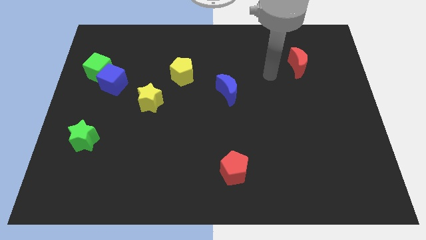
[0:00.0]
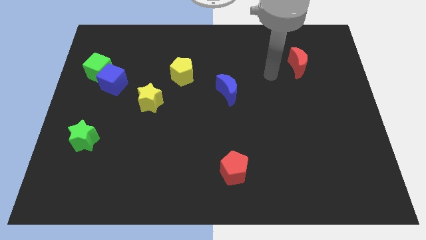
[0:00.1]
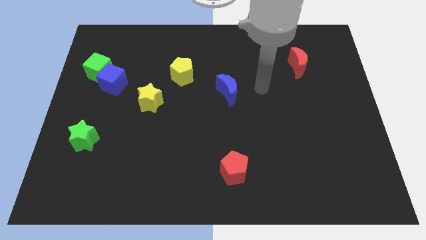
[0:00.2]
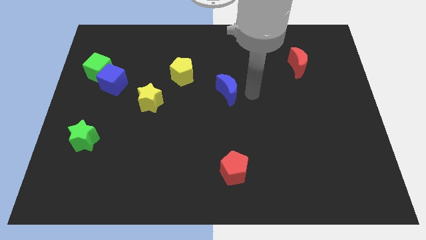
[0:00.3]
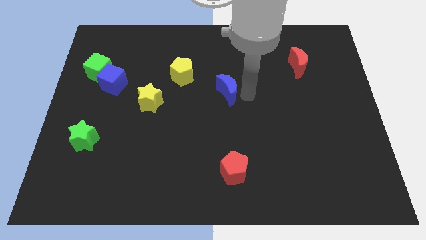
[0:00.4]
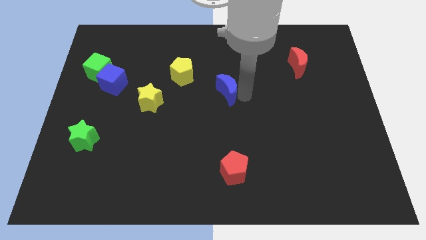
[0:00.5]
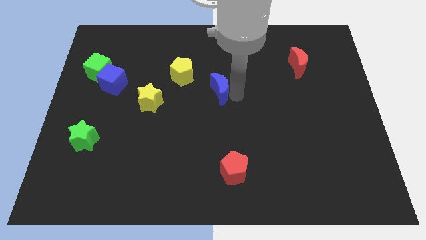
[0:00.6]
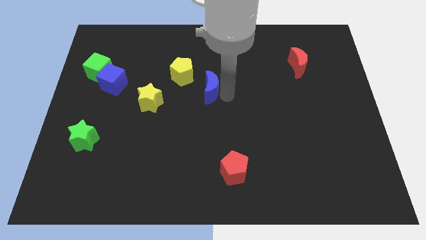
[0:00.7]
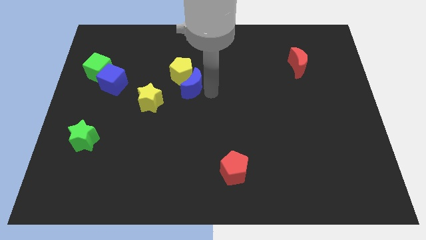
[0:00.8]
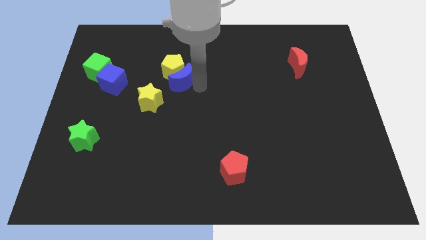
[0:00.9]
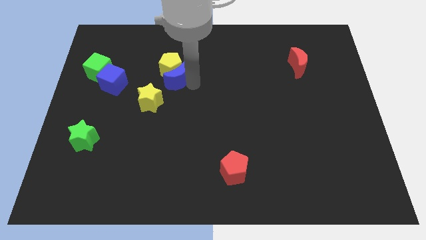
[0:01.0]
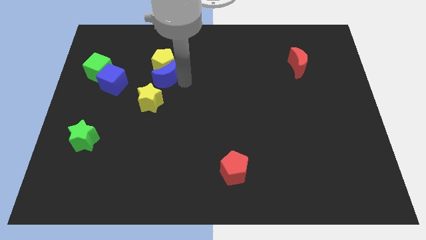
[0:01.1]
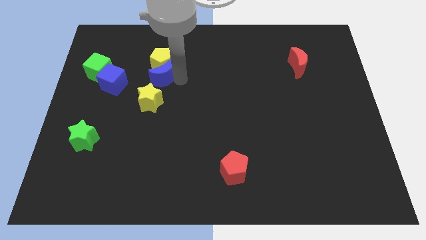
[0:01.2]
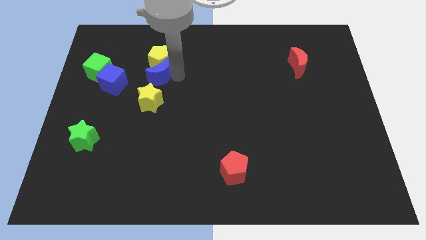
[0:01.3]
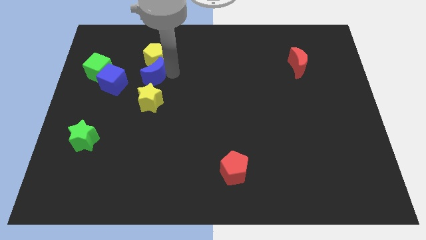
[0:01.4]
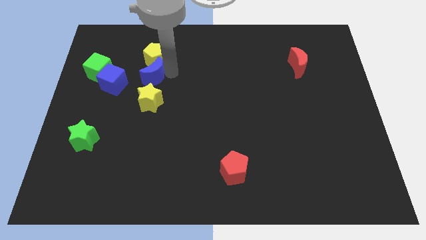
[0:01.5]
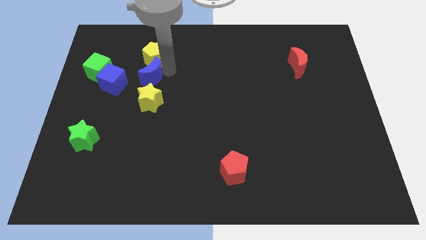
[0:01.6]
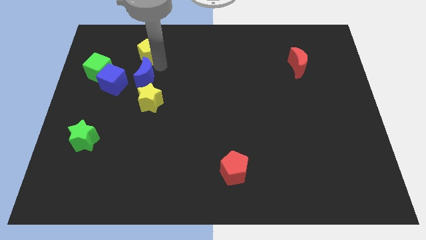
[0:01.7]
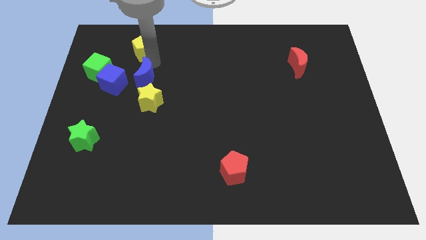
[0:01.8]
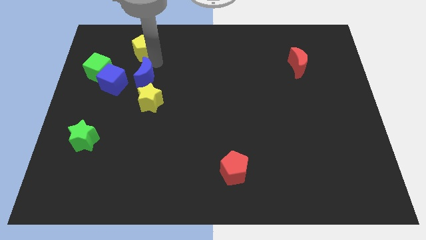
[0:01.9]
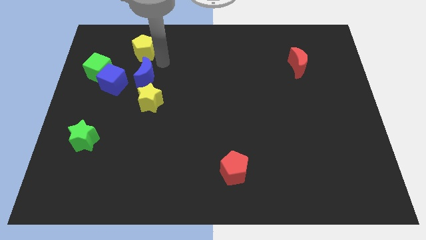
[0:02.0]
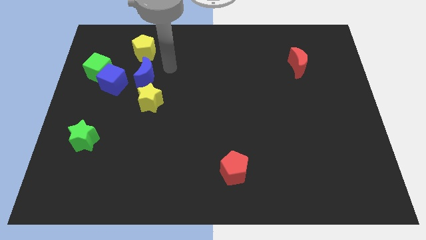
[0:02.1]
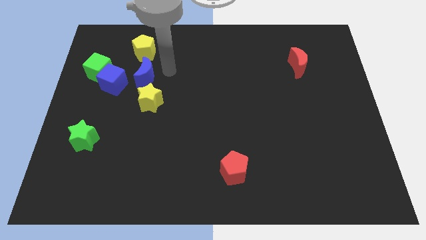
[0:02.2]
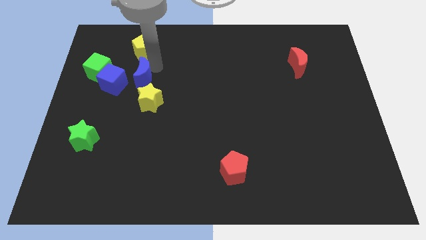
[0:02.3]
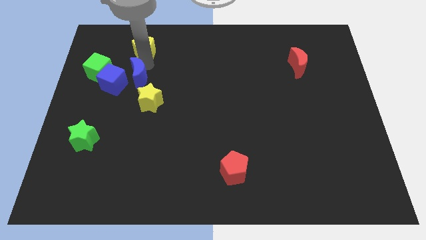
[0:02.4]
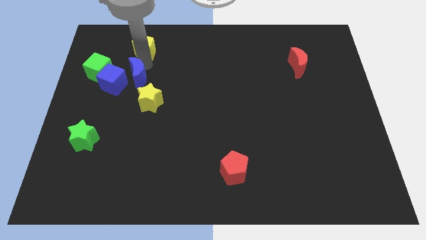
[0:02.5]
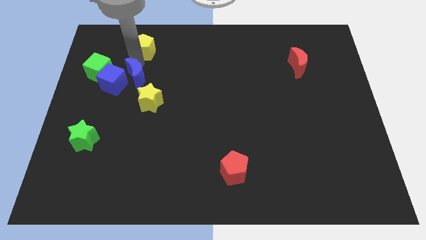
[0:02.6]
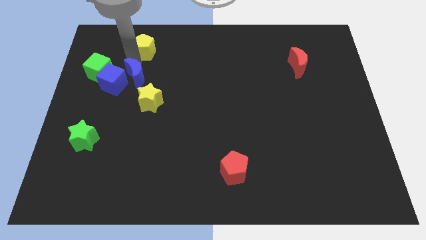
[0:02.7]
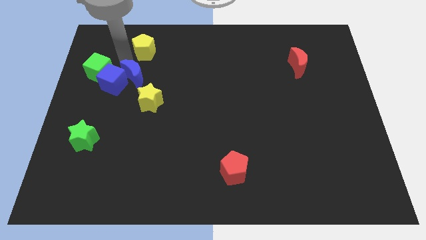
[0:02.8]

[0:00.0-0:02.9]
push the blue moon close to the blue cube

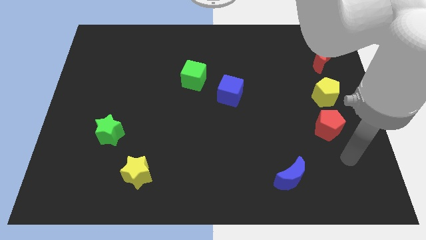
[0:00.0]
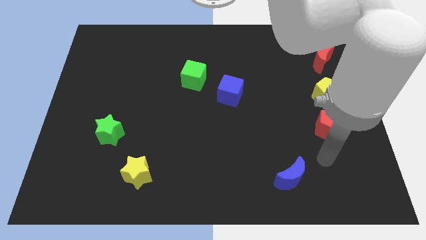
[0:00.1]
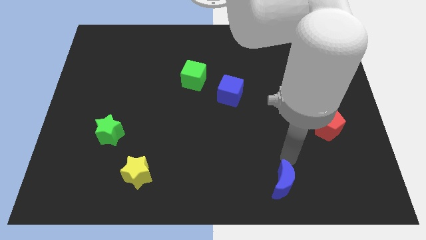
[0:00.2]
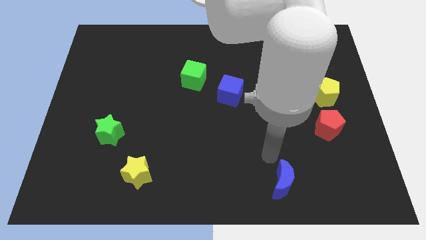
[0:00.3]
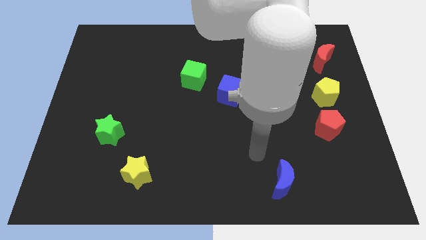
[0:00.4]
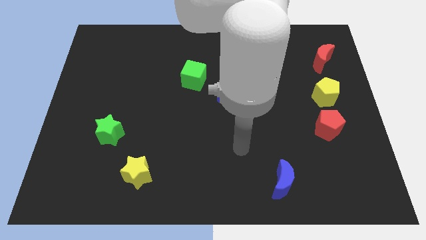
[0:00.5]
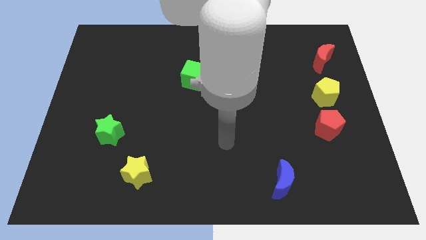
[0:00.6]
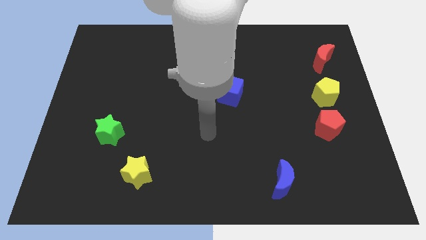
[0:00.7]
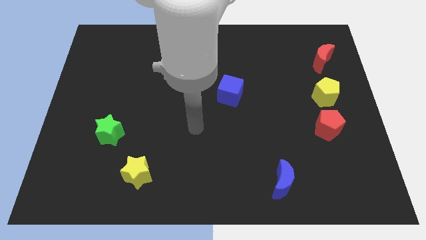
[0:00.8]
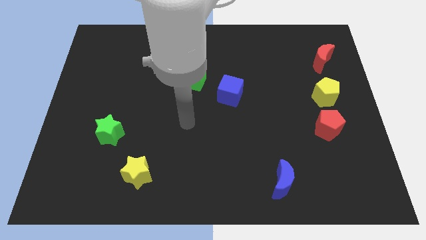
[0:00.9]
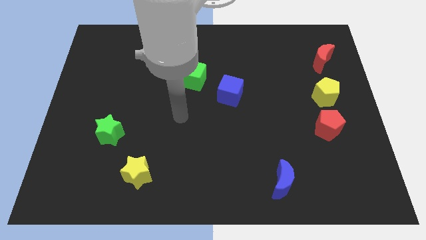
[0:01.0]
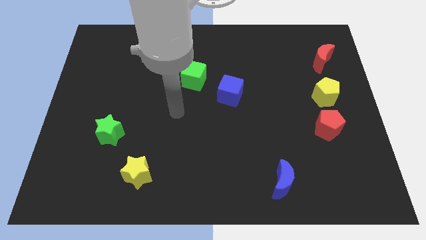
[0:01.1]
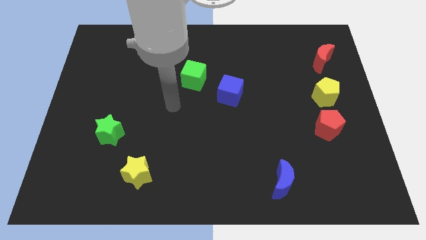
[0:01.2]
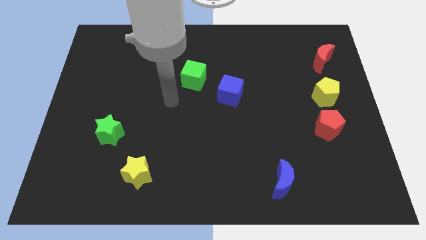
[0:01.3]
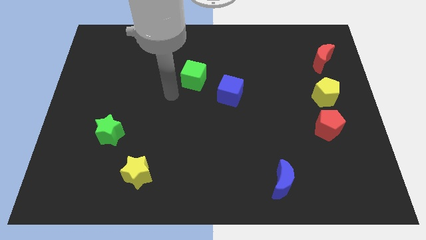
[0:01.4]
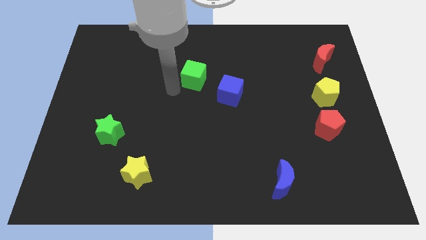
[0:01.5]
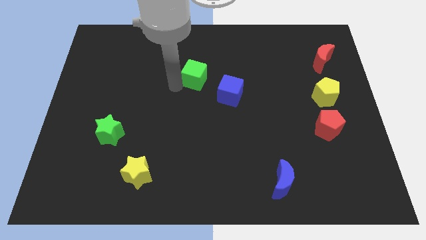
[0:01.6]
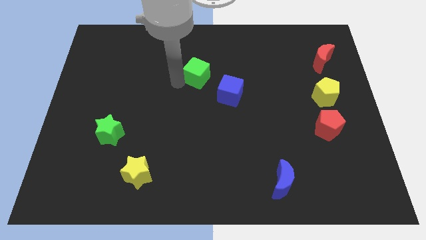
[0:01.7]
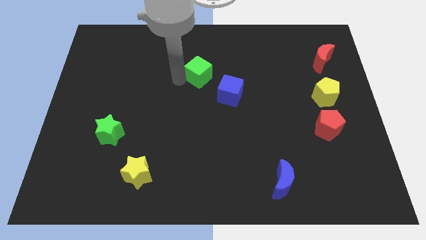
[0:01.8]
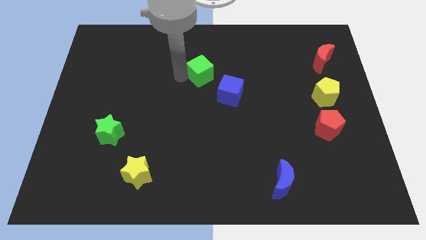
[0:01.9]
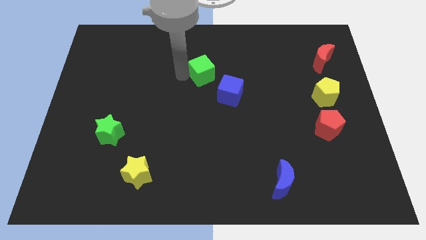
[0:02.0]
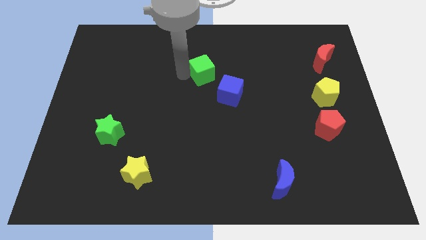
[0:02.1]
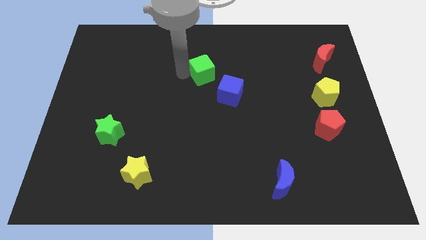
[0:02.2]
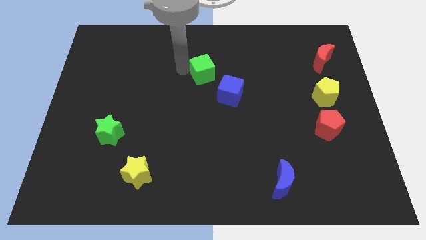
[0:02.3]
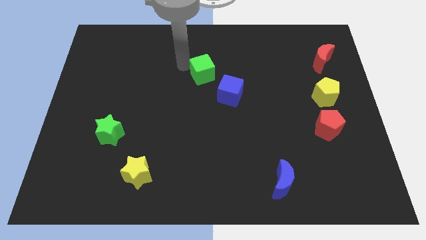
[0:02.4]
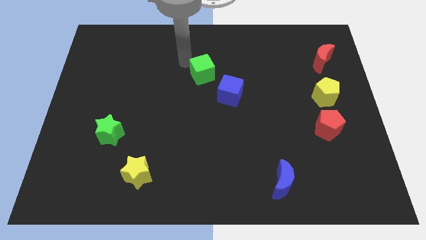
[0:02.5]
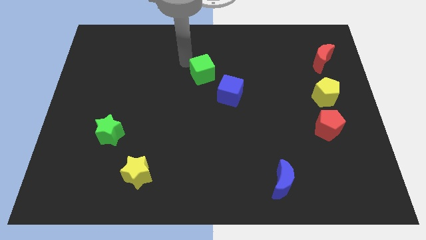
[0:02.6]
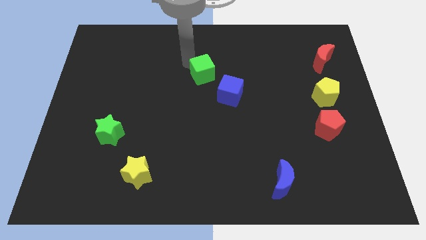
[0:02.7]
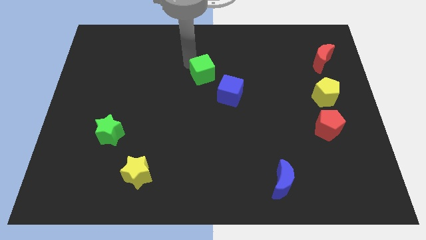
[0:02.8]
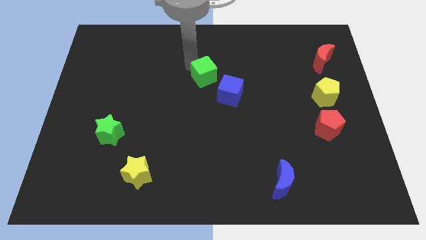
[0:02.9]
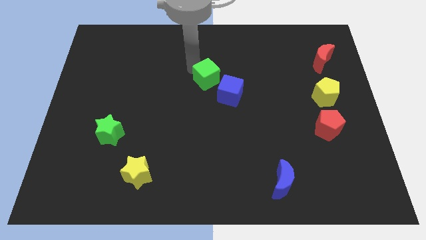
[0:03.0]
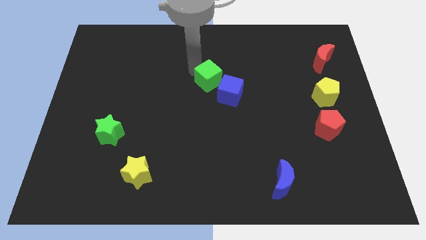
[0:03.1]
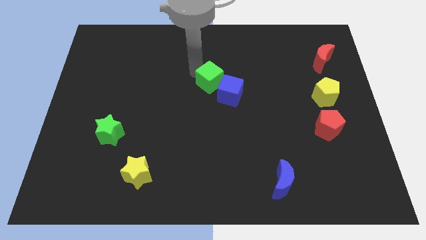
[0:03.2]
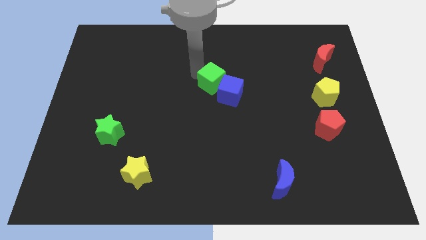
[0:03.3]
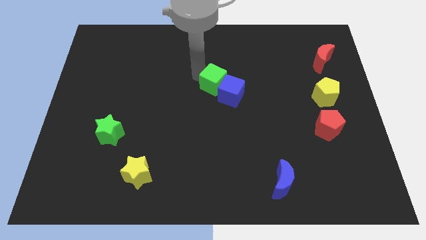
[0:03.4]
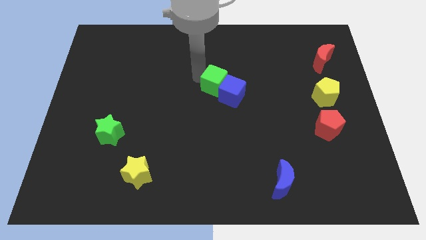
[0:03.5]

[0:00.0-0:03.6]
slide the green cube towards the blue cube

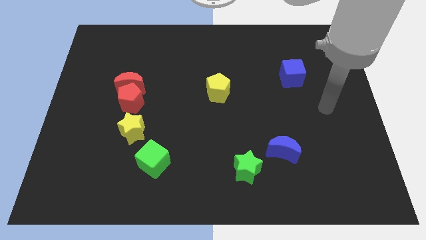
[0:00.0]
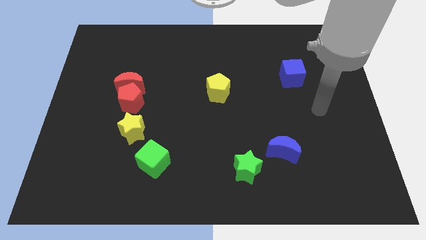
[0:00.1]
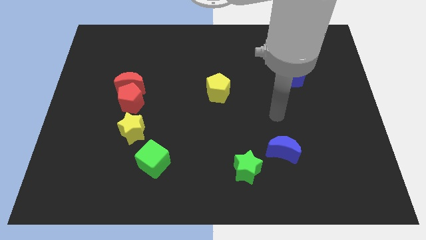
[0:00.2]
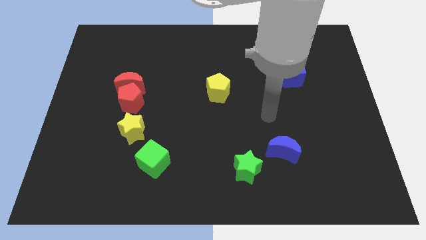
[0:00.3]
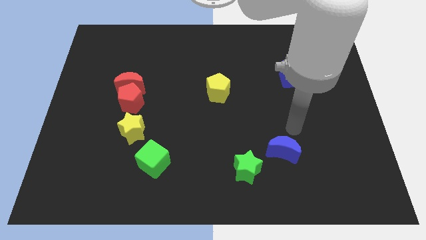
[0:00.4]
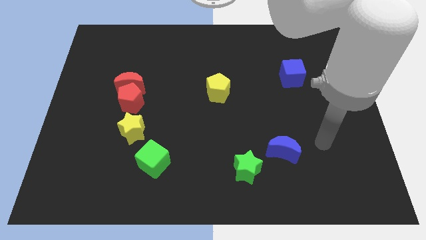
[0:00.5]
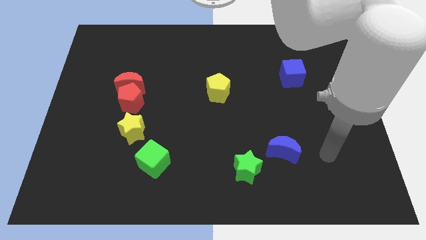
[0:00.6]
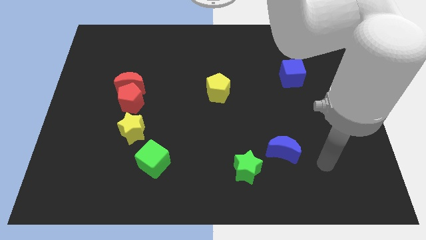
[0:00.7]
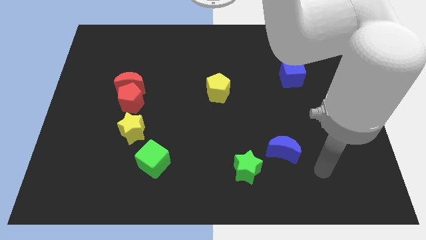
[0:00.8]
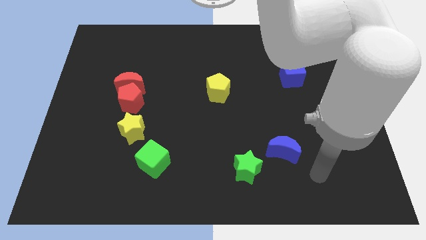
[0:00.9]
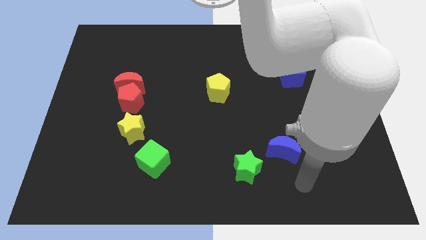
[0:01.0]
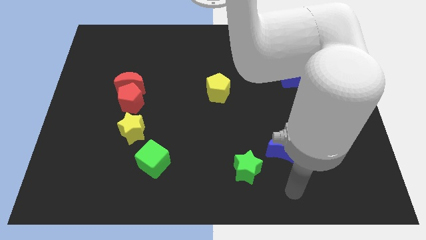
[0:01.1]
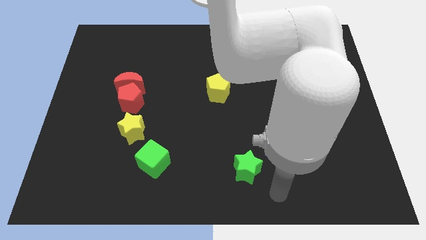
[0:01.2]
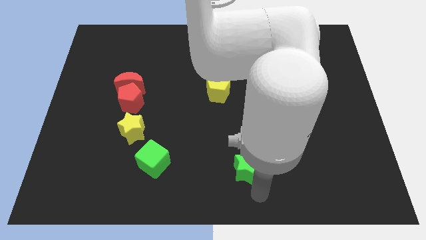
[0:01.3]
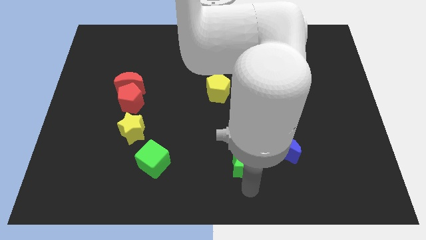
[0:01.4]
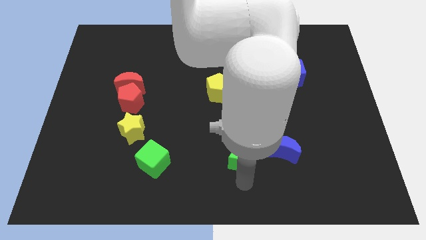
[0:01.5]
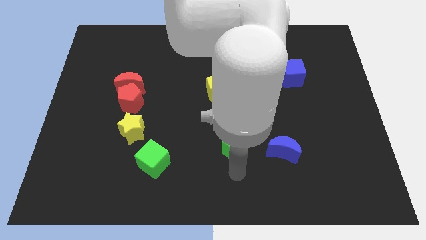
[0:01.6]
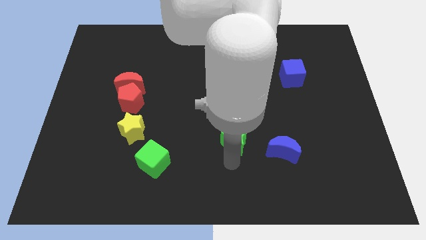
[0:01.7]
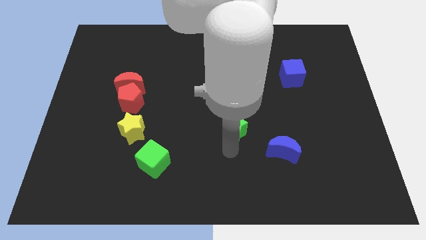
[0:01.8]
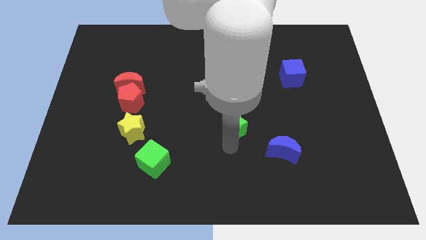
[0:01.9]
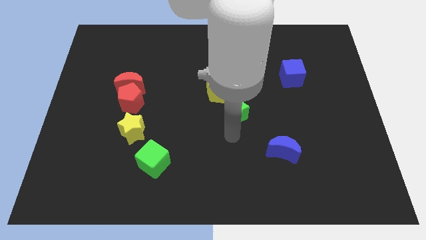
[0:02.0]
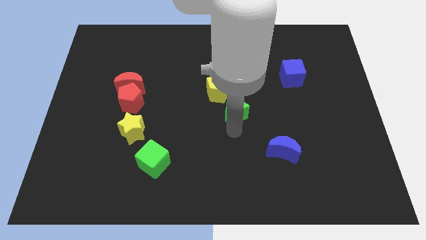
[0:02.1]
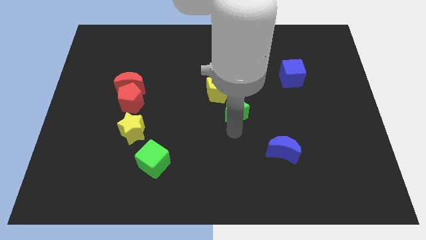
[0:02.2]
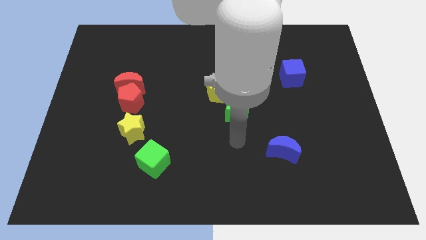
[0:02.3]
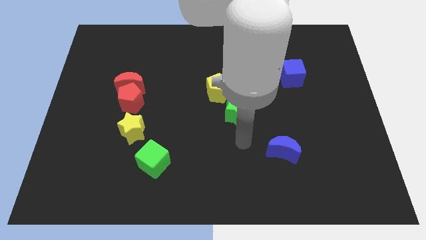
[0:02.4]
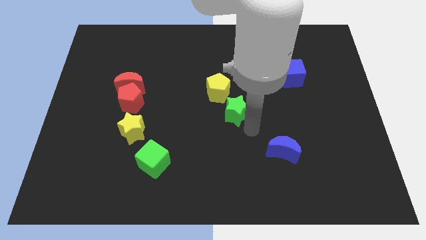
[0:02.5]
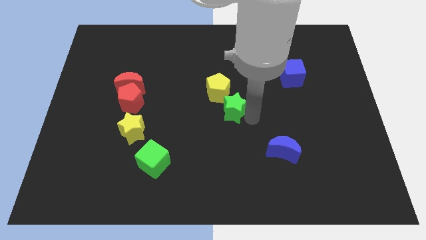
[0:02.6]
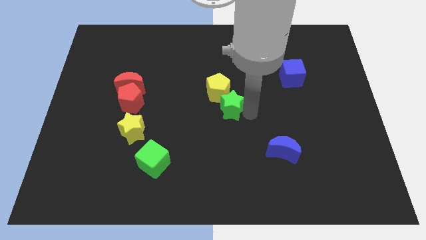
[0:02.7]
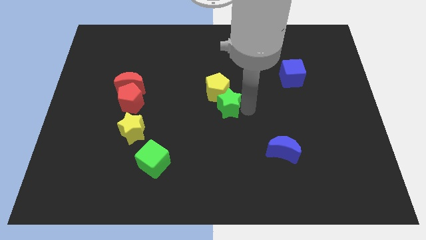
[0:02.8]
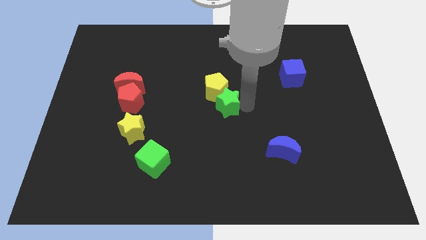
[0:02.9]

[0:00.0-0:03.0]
push the green star close to the yellow pentagon
